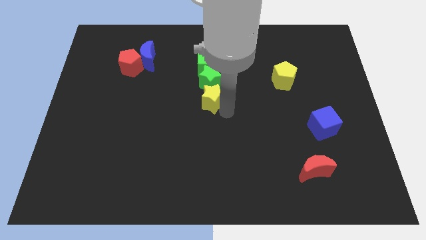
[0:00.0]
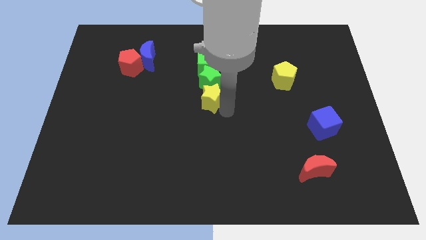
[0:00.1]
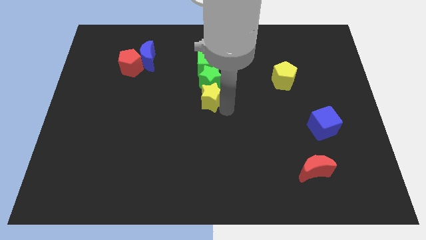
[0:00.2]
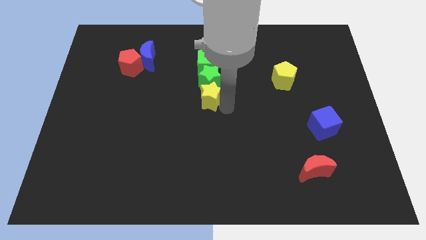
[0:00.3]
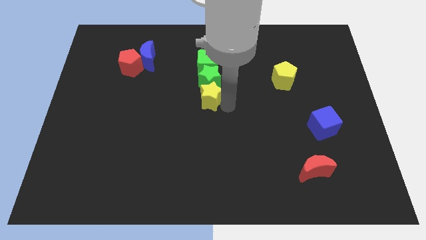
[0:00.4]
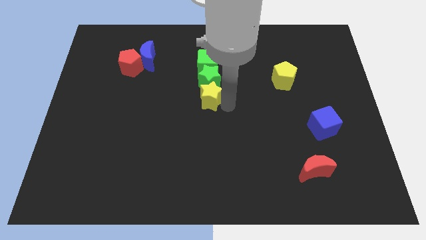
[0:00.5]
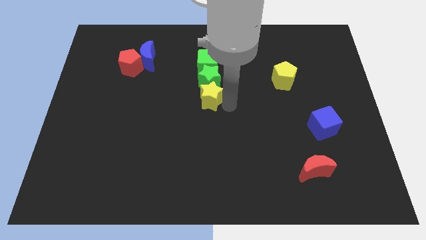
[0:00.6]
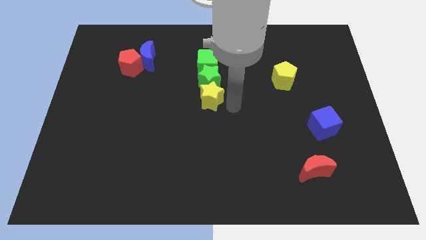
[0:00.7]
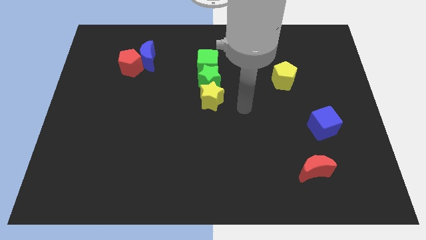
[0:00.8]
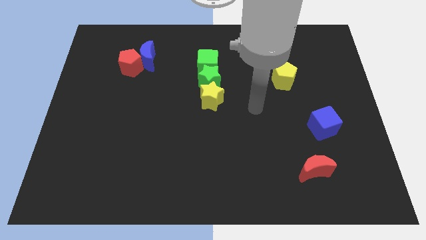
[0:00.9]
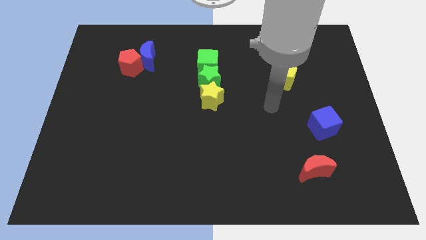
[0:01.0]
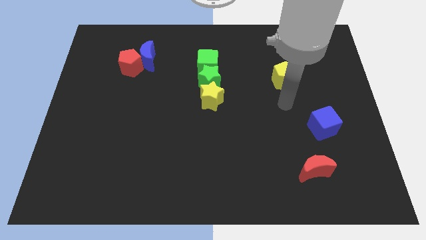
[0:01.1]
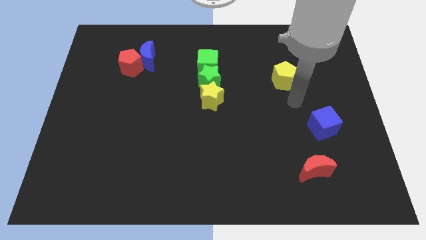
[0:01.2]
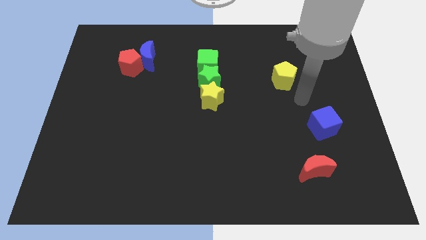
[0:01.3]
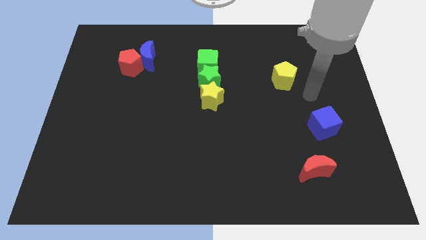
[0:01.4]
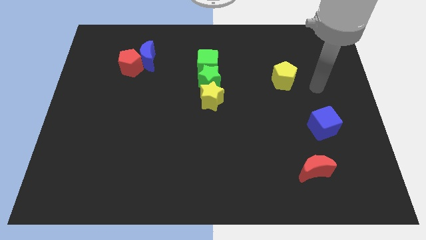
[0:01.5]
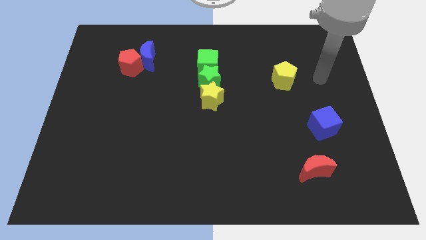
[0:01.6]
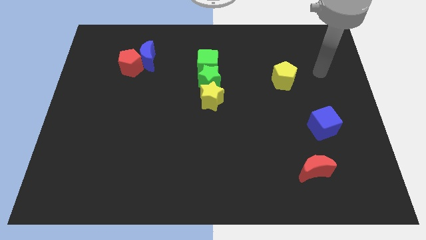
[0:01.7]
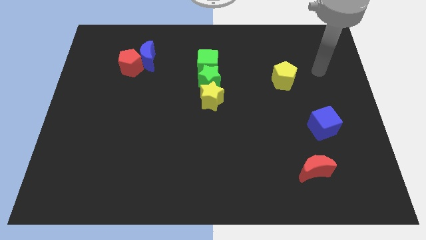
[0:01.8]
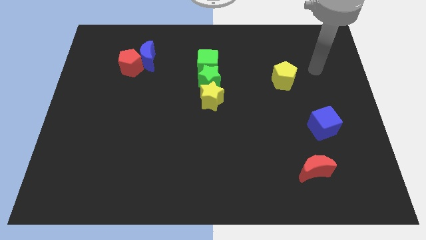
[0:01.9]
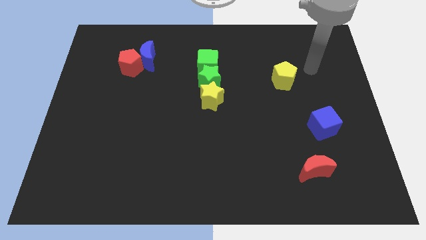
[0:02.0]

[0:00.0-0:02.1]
slightly adjust the yellow star to the diagonal of yellow pentagon

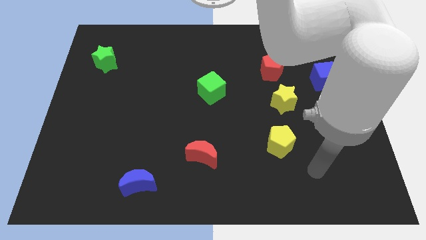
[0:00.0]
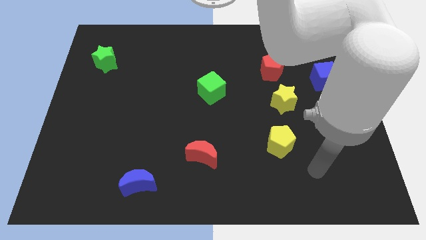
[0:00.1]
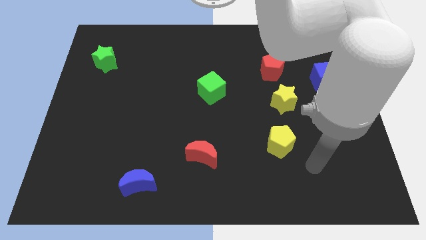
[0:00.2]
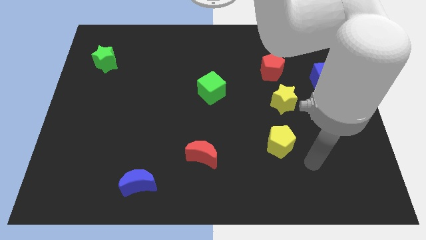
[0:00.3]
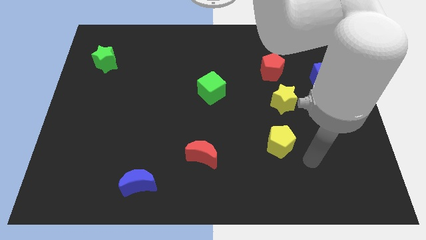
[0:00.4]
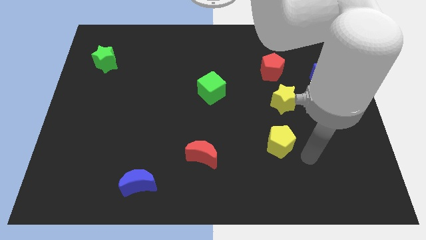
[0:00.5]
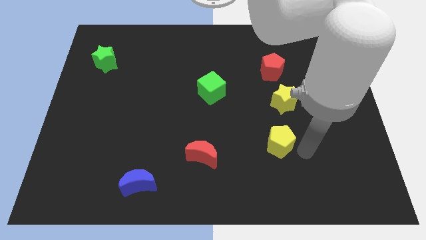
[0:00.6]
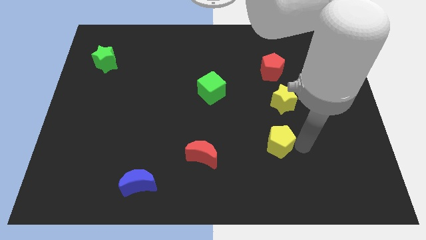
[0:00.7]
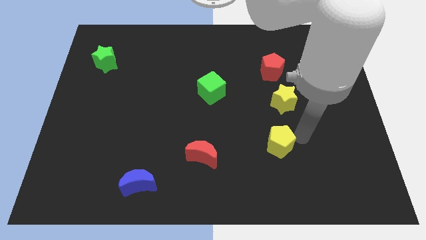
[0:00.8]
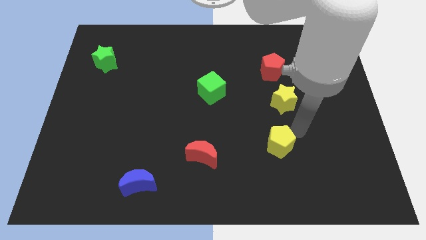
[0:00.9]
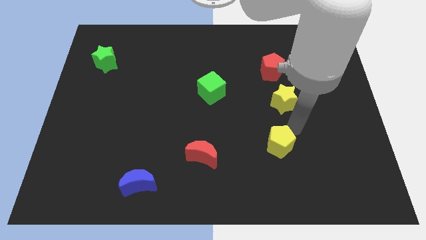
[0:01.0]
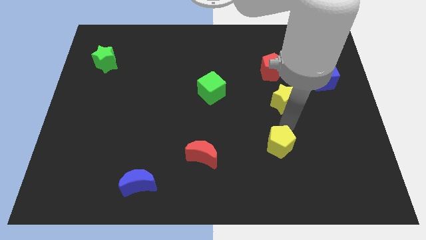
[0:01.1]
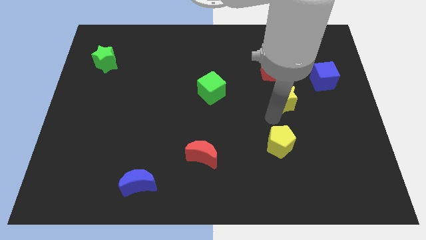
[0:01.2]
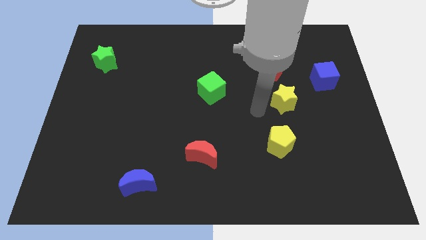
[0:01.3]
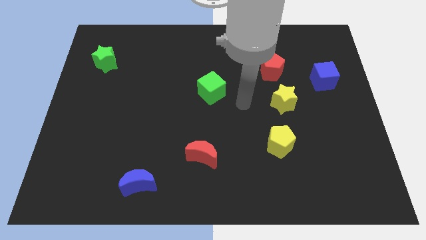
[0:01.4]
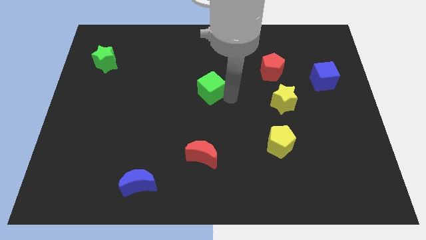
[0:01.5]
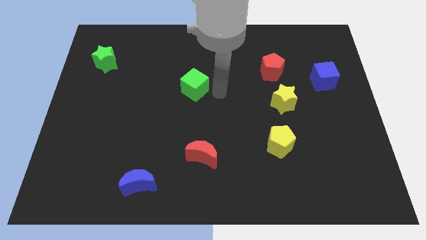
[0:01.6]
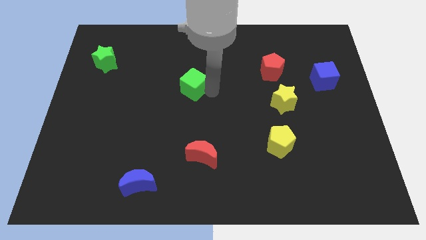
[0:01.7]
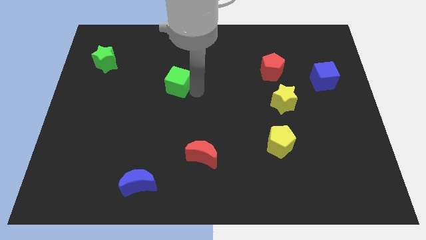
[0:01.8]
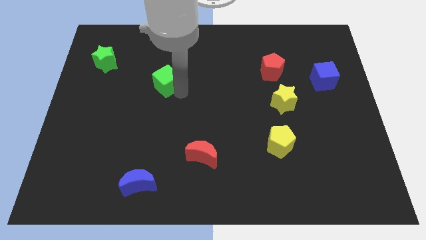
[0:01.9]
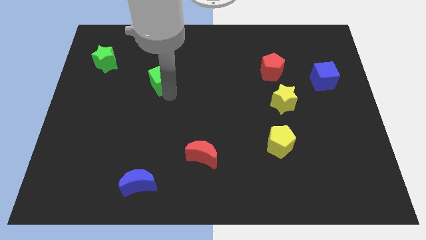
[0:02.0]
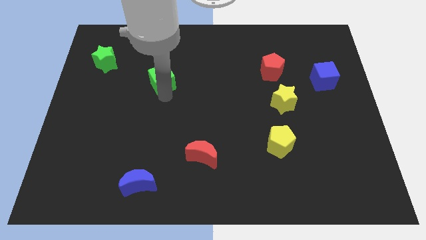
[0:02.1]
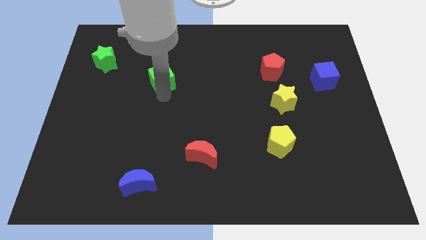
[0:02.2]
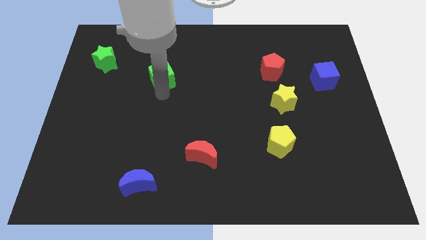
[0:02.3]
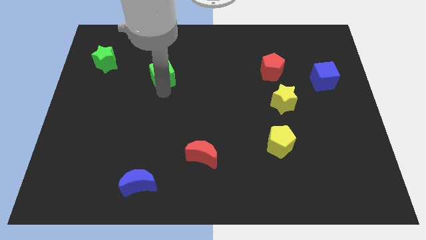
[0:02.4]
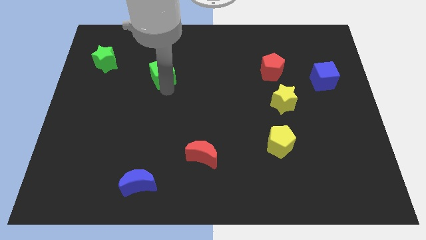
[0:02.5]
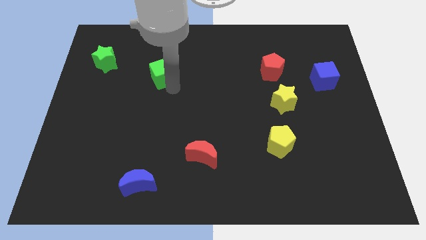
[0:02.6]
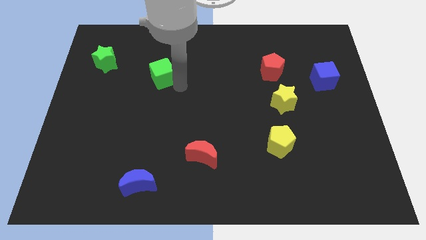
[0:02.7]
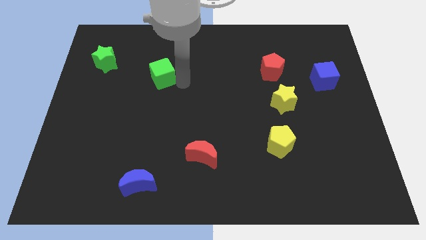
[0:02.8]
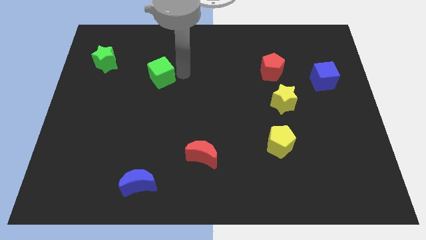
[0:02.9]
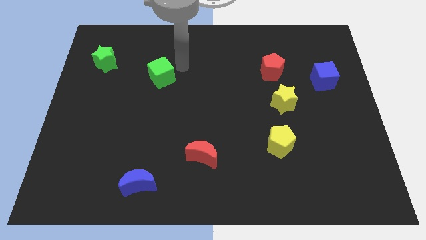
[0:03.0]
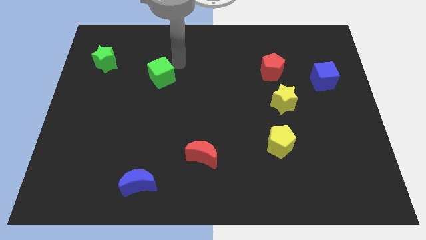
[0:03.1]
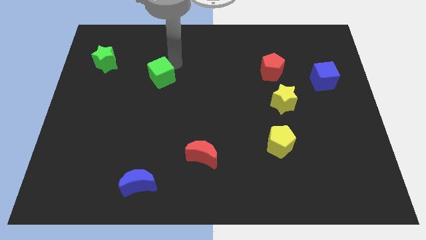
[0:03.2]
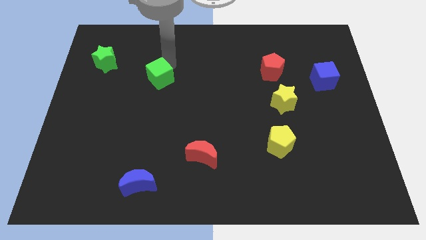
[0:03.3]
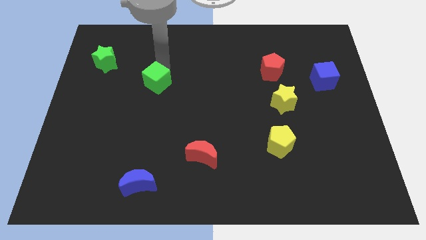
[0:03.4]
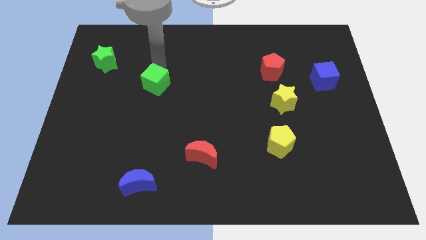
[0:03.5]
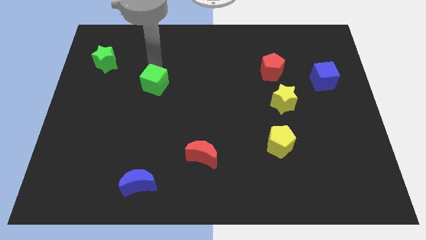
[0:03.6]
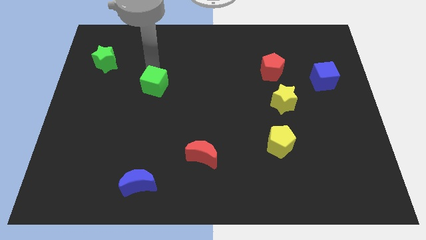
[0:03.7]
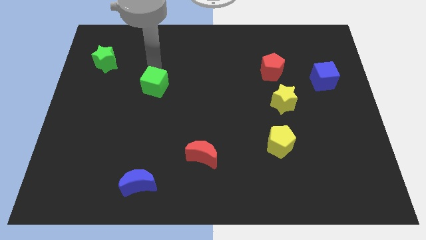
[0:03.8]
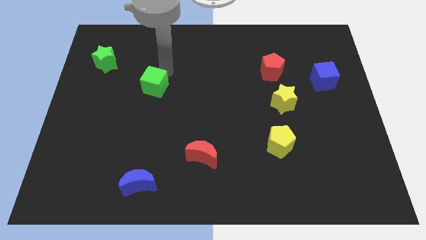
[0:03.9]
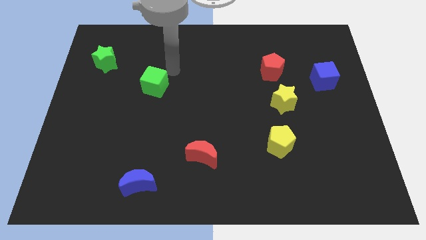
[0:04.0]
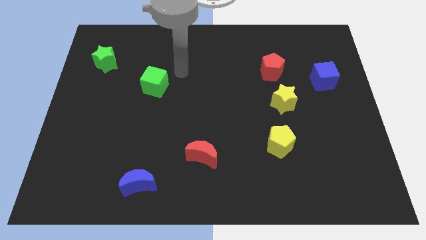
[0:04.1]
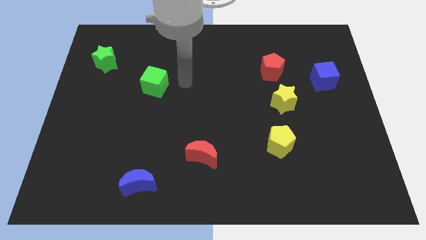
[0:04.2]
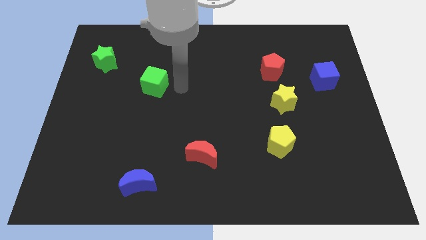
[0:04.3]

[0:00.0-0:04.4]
put the green cube diagonal to the yellow pentagon

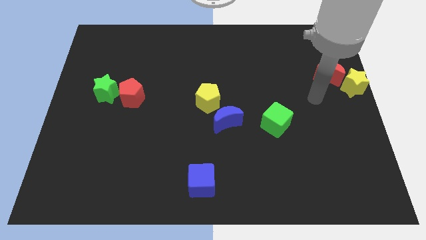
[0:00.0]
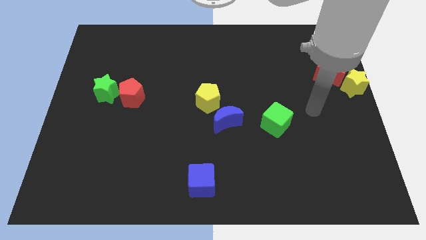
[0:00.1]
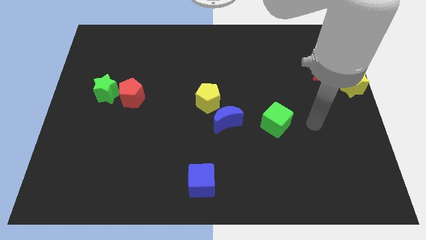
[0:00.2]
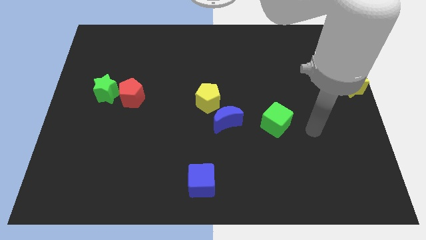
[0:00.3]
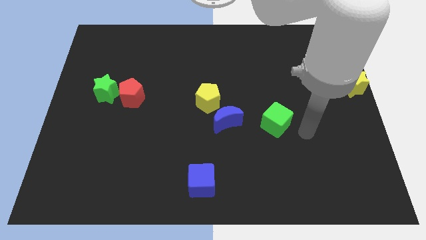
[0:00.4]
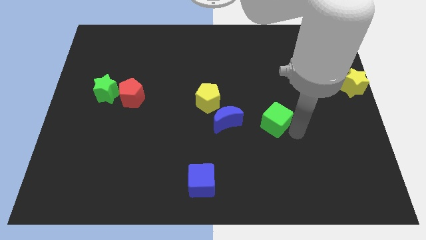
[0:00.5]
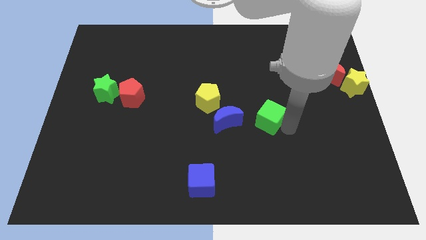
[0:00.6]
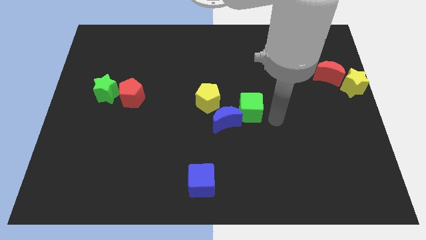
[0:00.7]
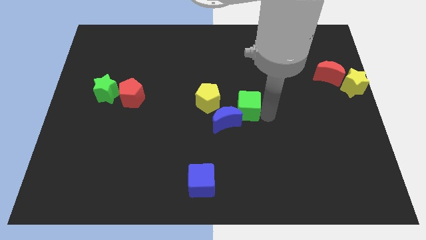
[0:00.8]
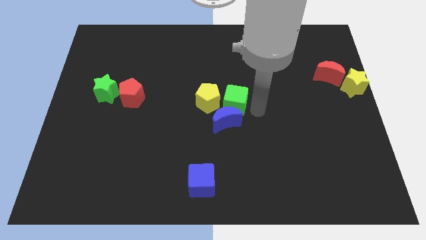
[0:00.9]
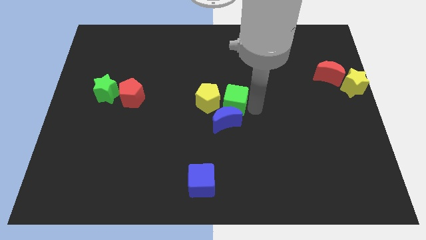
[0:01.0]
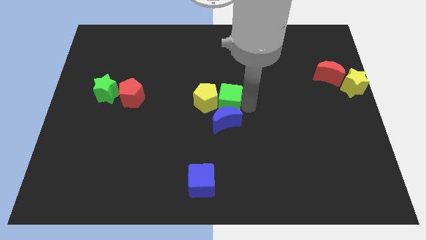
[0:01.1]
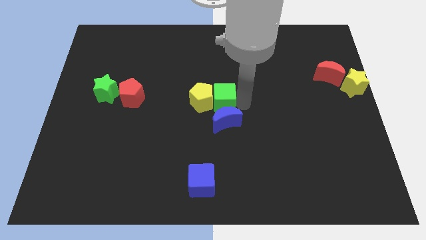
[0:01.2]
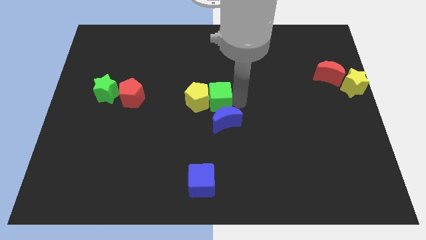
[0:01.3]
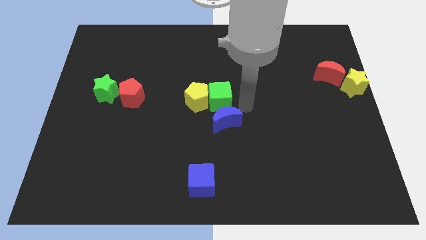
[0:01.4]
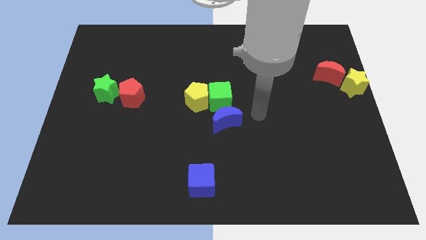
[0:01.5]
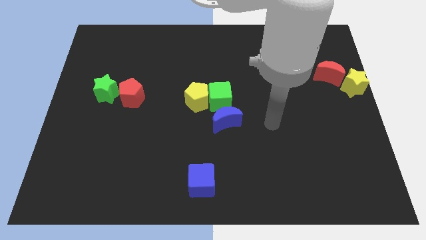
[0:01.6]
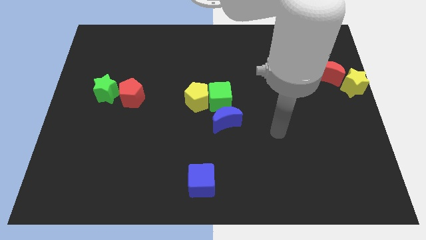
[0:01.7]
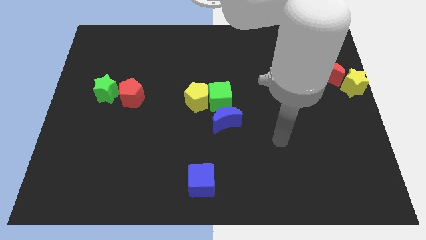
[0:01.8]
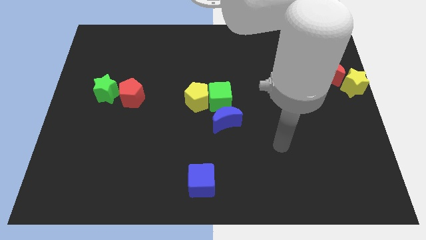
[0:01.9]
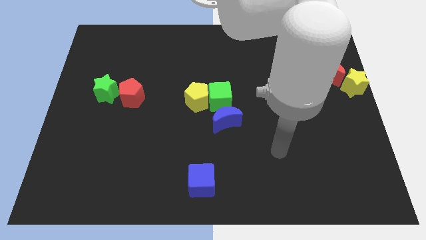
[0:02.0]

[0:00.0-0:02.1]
push green cube close to the yellow pentagon

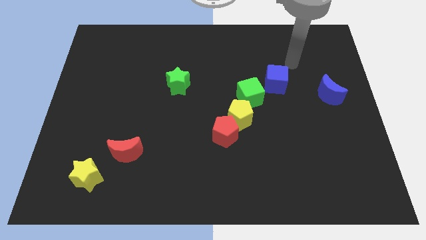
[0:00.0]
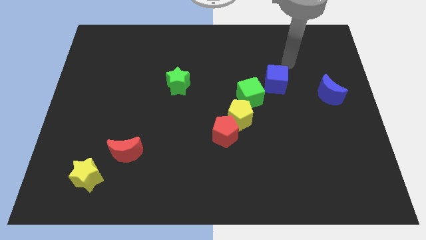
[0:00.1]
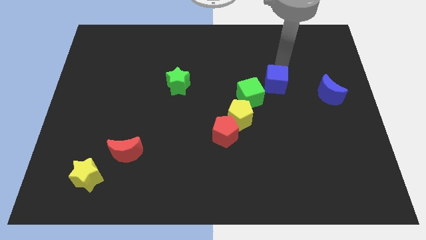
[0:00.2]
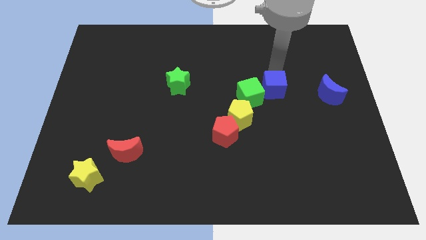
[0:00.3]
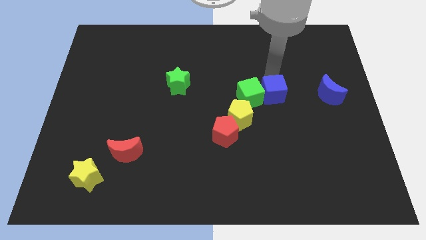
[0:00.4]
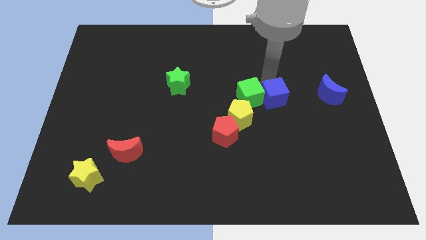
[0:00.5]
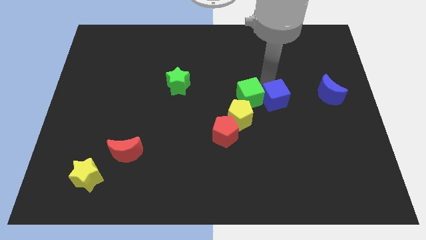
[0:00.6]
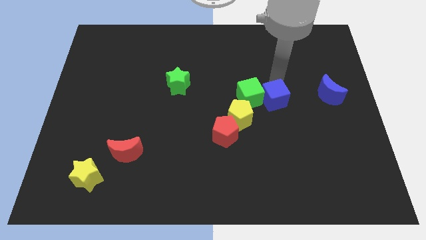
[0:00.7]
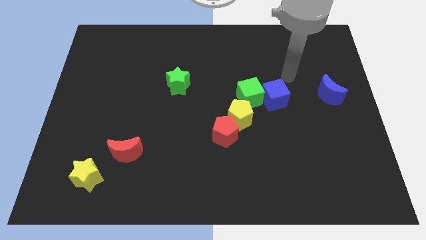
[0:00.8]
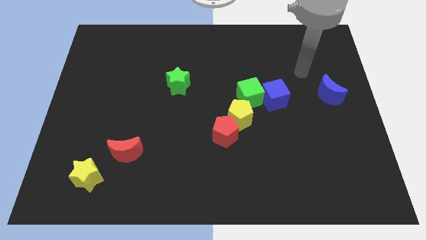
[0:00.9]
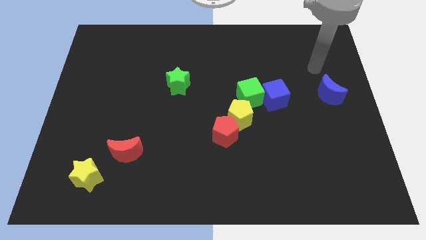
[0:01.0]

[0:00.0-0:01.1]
place blue cube on the right side of green cube
